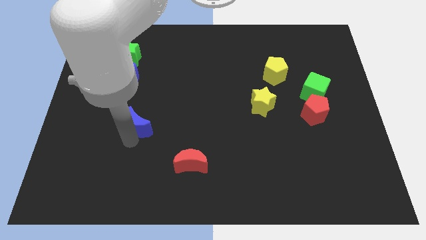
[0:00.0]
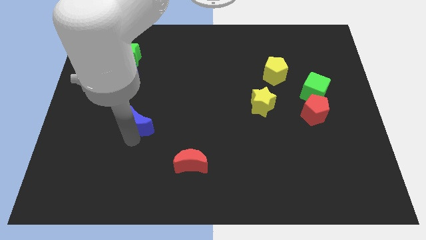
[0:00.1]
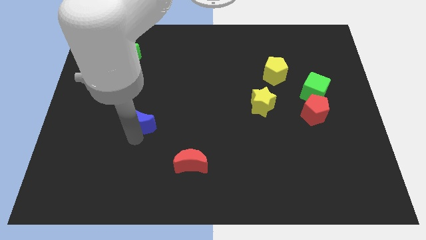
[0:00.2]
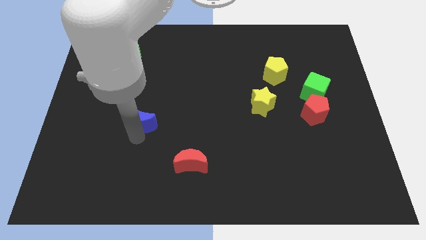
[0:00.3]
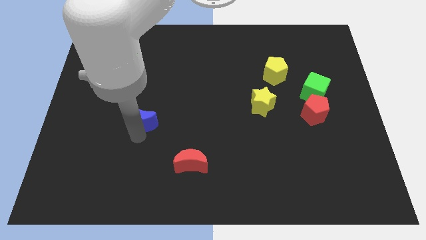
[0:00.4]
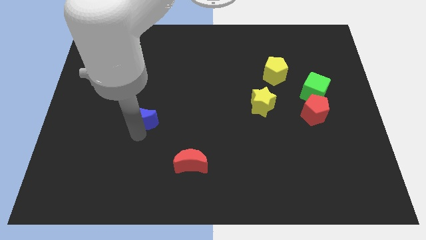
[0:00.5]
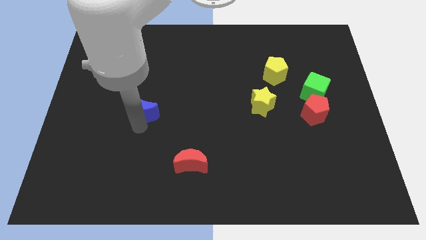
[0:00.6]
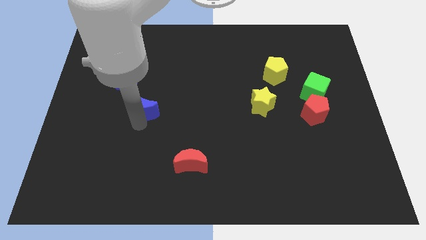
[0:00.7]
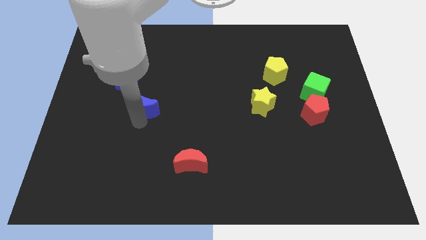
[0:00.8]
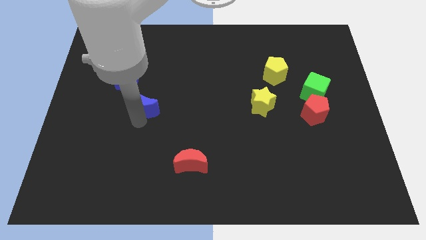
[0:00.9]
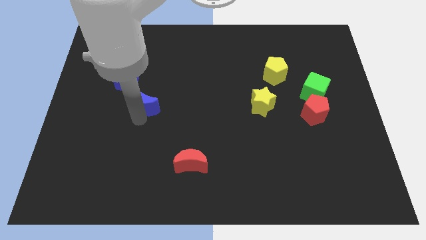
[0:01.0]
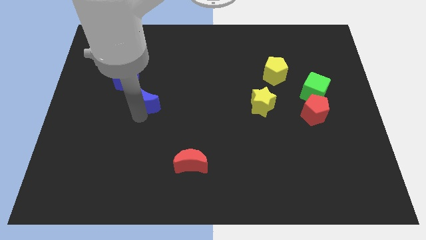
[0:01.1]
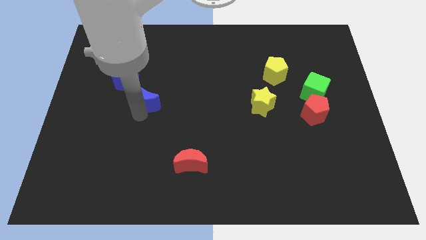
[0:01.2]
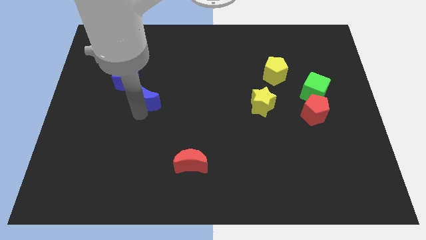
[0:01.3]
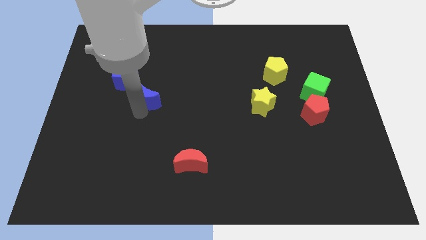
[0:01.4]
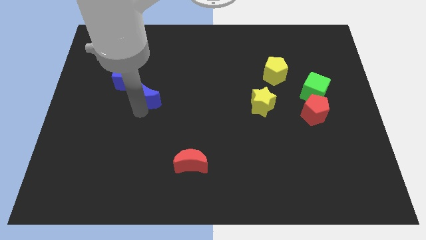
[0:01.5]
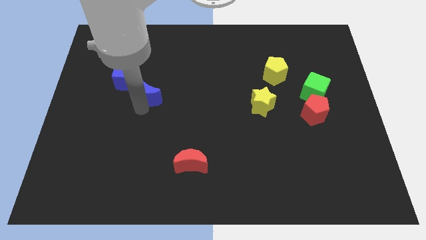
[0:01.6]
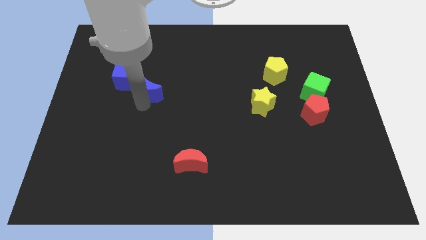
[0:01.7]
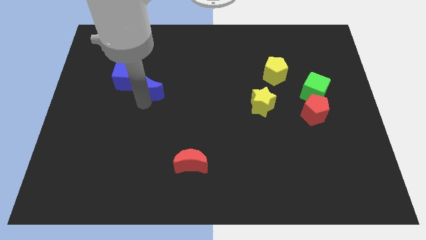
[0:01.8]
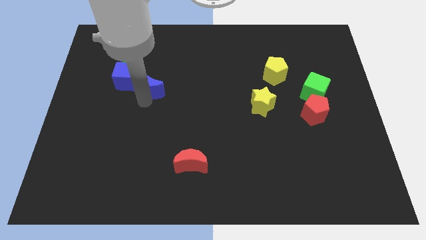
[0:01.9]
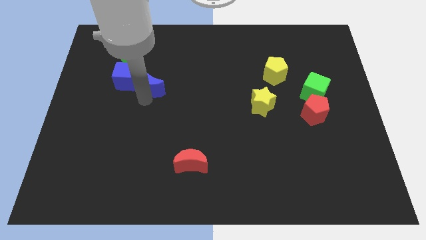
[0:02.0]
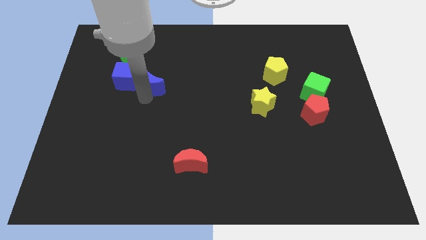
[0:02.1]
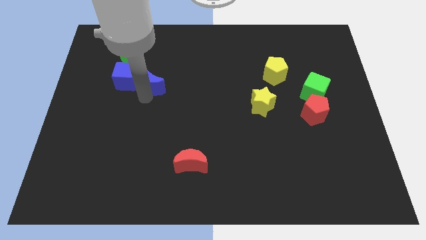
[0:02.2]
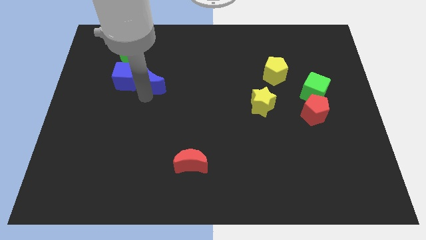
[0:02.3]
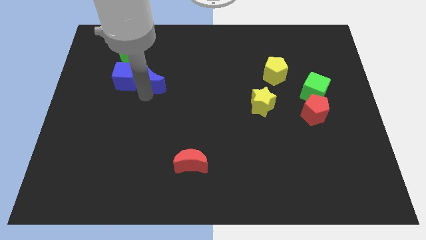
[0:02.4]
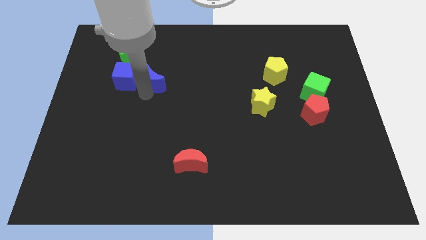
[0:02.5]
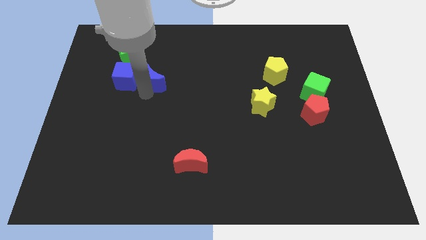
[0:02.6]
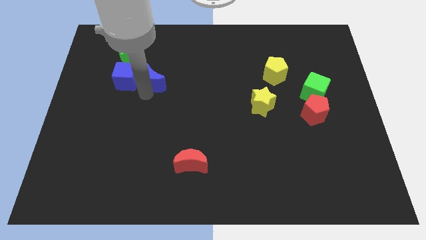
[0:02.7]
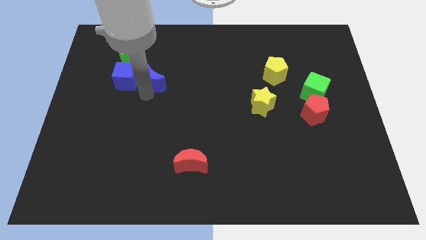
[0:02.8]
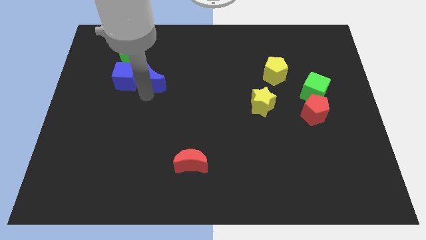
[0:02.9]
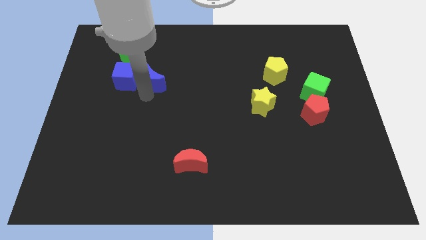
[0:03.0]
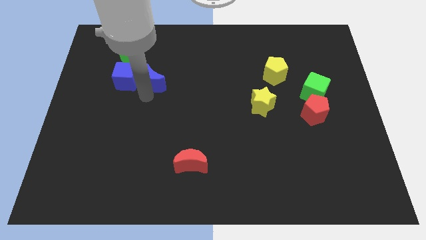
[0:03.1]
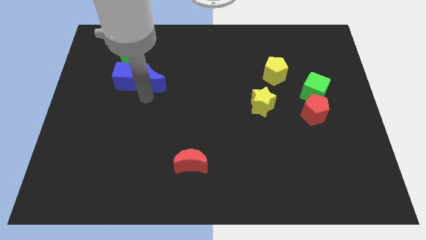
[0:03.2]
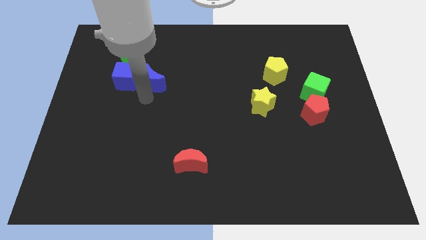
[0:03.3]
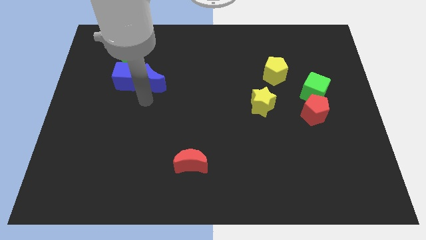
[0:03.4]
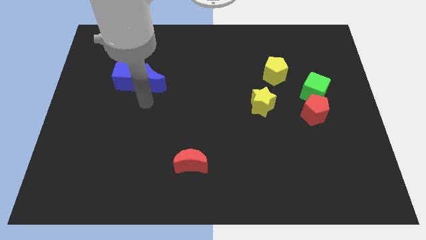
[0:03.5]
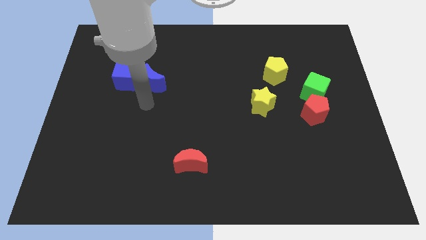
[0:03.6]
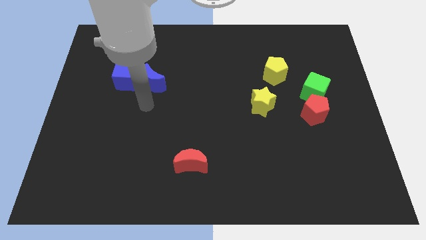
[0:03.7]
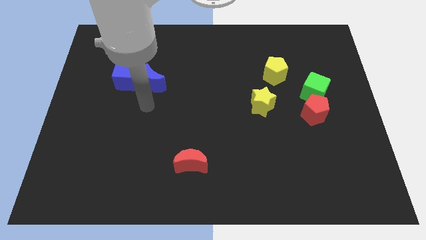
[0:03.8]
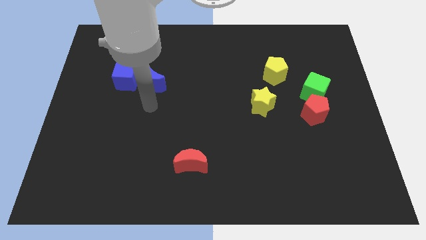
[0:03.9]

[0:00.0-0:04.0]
push blue moon beside blue cube

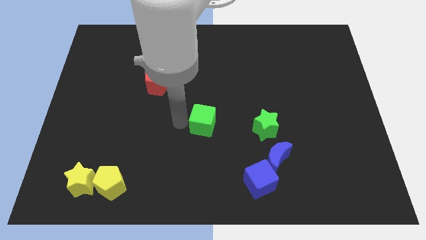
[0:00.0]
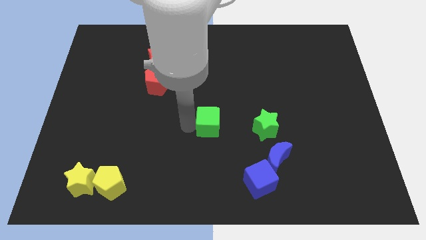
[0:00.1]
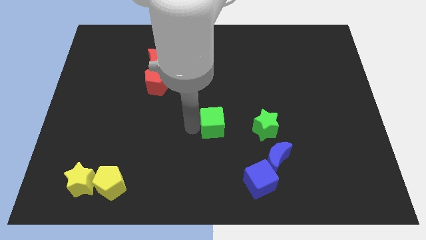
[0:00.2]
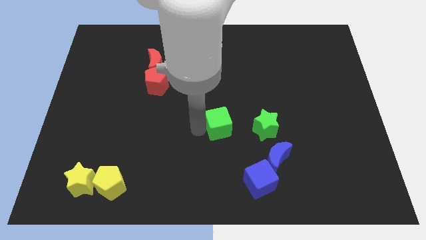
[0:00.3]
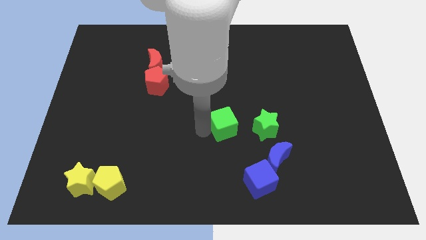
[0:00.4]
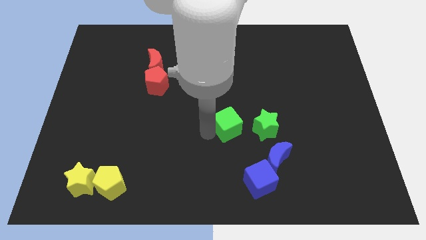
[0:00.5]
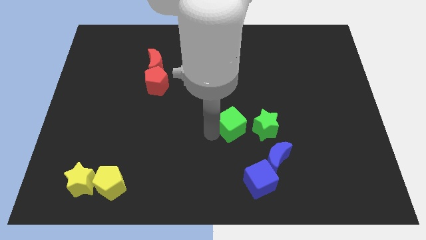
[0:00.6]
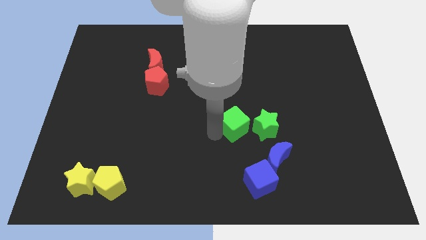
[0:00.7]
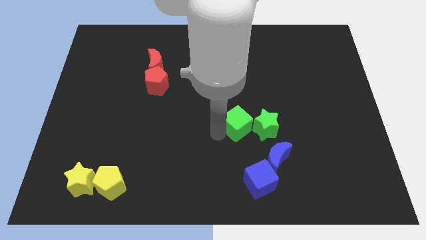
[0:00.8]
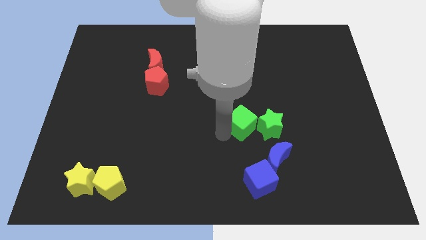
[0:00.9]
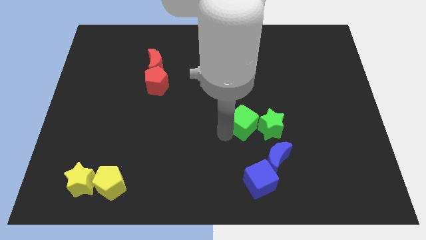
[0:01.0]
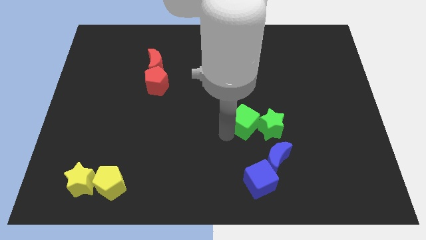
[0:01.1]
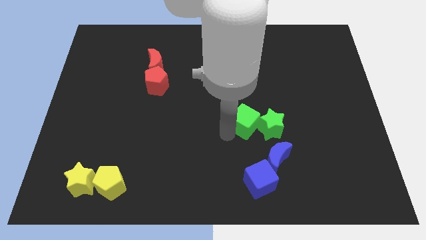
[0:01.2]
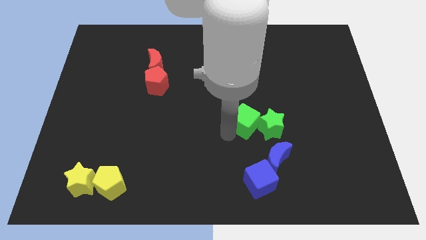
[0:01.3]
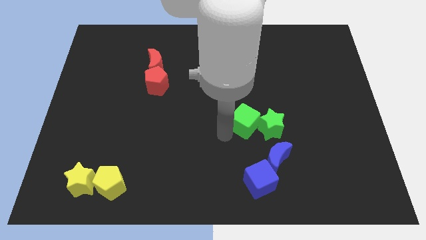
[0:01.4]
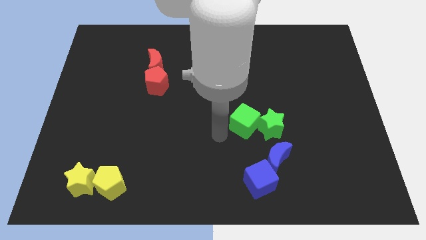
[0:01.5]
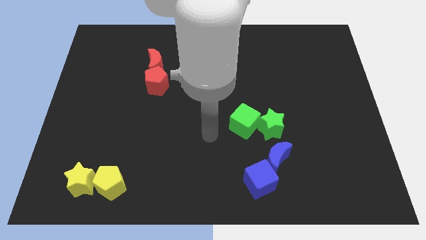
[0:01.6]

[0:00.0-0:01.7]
move the green cube towards the left of the green star

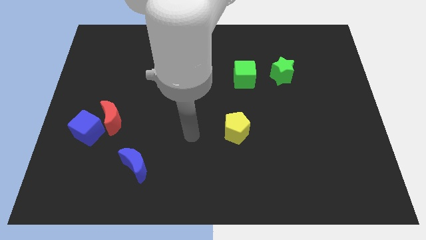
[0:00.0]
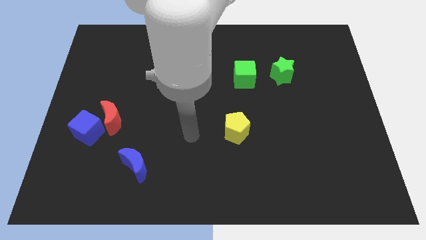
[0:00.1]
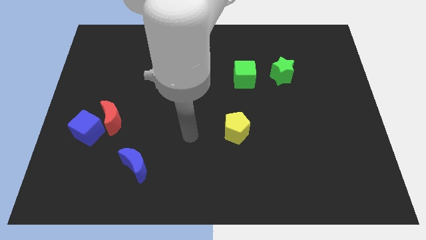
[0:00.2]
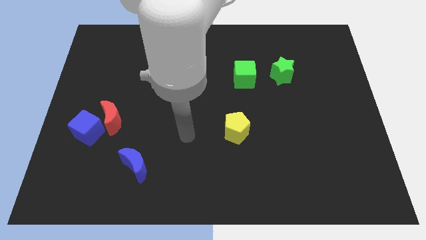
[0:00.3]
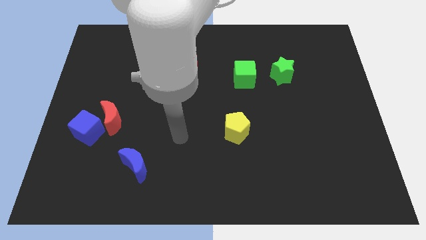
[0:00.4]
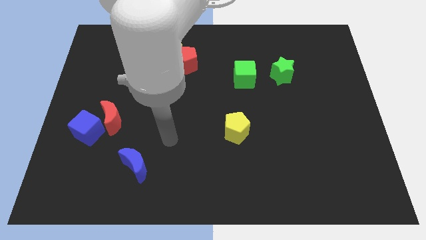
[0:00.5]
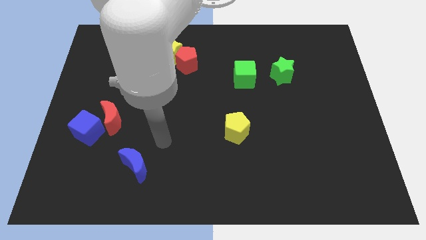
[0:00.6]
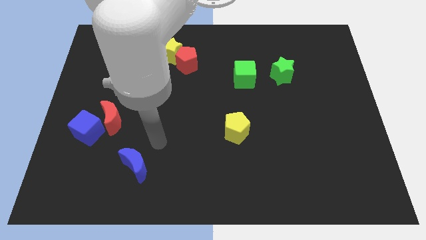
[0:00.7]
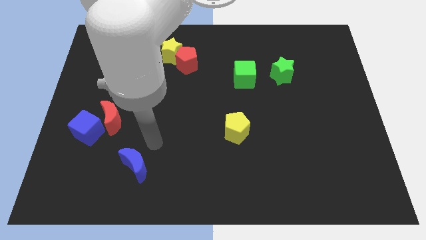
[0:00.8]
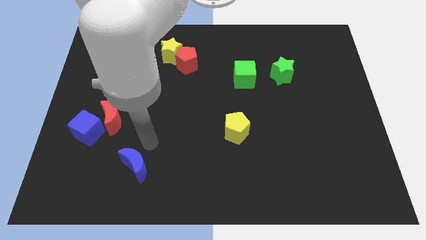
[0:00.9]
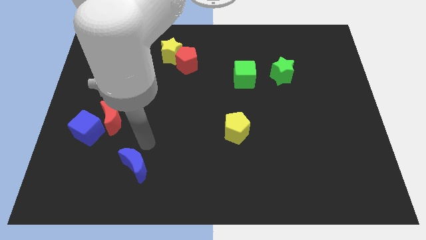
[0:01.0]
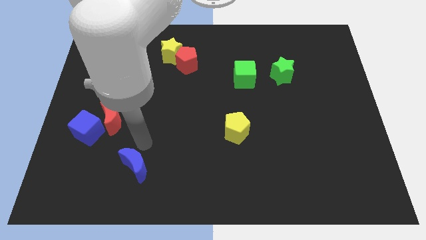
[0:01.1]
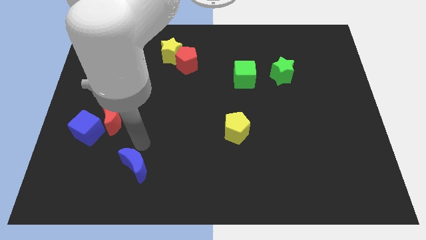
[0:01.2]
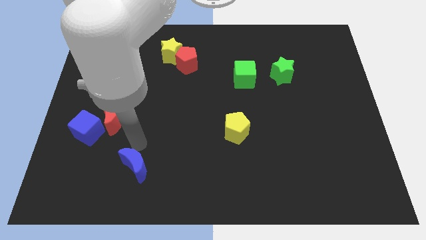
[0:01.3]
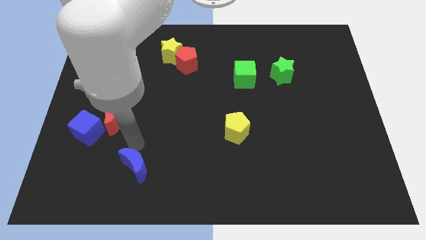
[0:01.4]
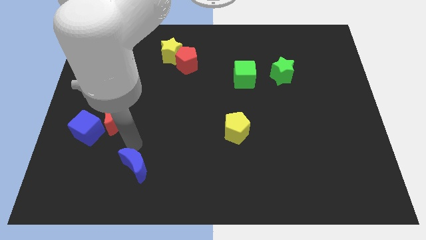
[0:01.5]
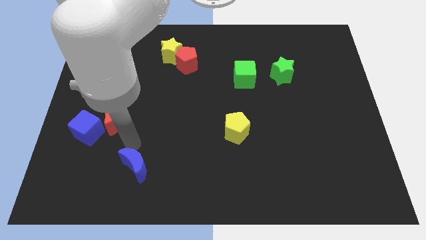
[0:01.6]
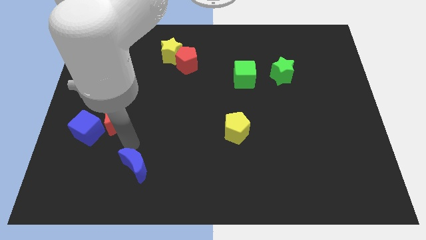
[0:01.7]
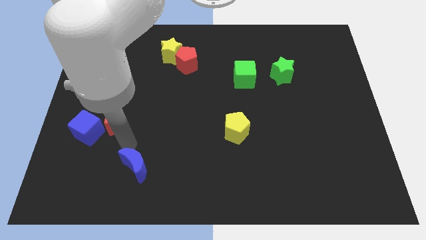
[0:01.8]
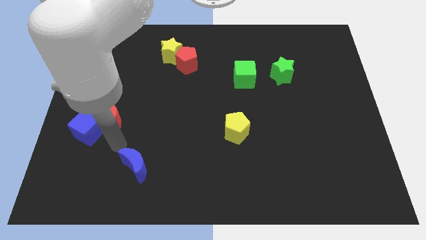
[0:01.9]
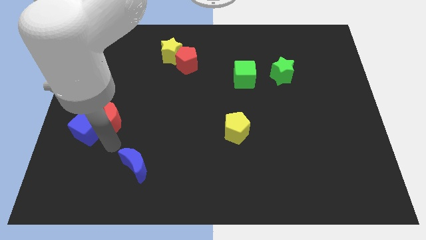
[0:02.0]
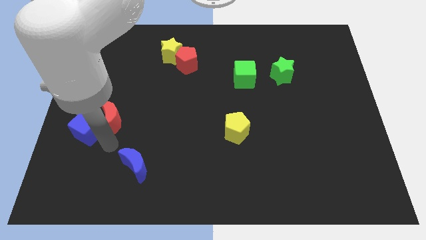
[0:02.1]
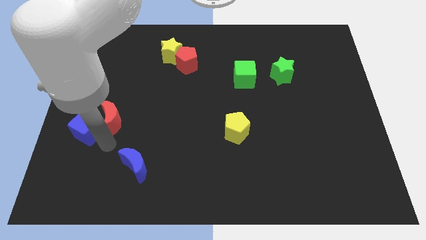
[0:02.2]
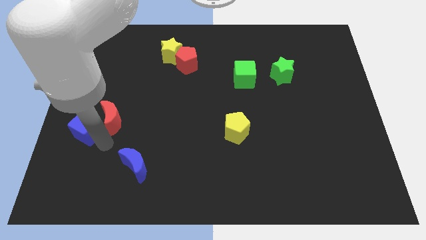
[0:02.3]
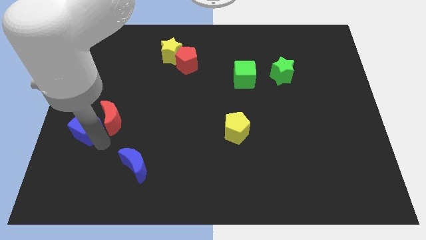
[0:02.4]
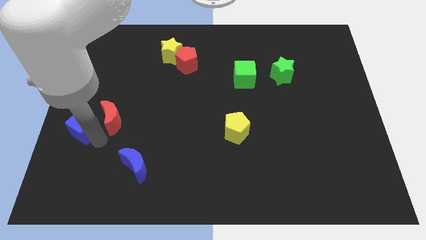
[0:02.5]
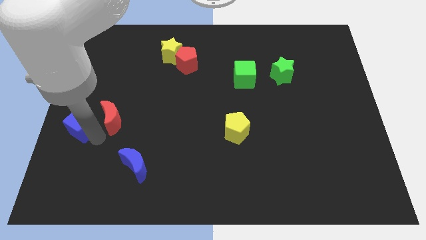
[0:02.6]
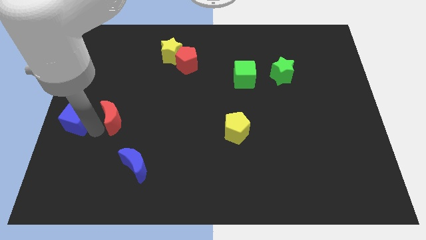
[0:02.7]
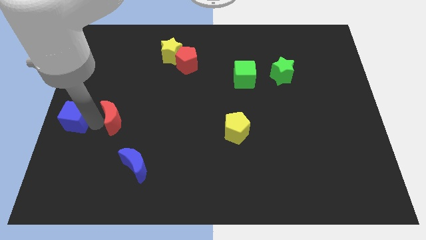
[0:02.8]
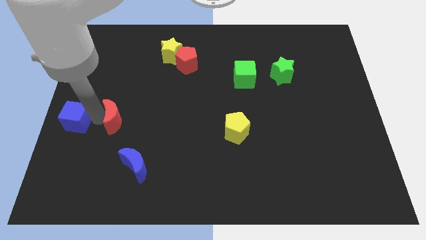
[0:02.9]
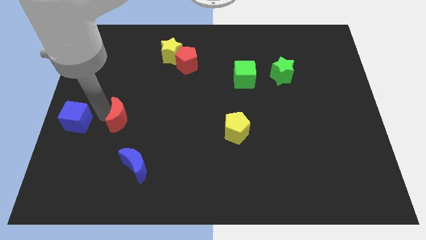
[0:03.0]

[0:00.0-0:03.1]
move your arm to the right side of the blue cube

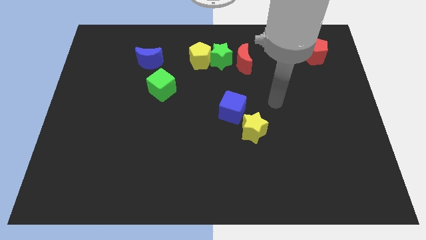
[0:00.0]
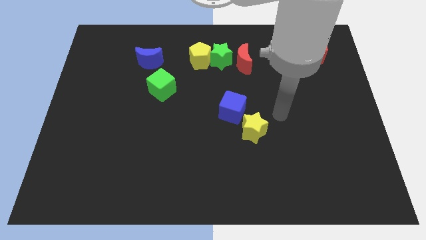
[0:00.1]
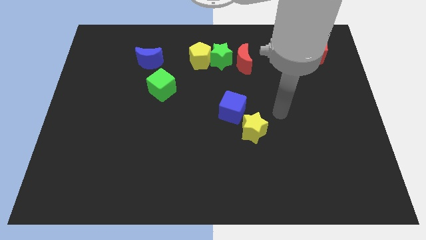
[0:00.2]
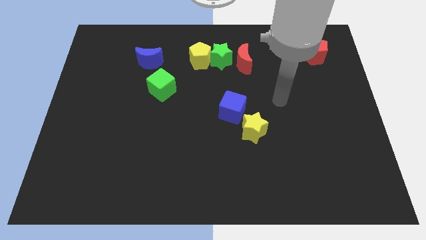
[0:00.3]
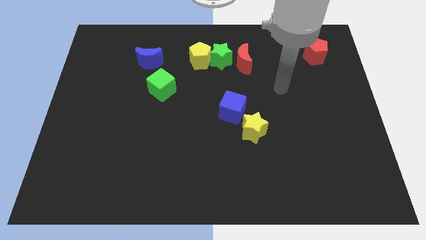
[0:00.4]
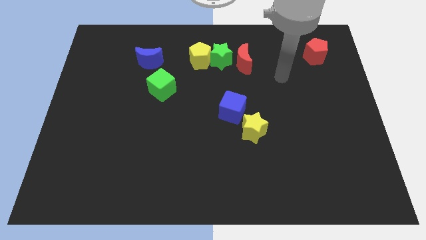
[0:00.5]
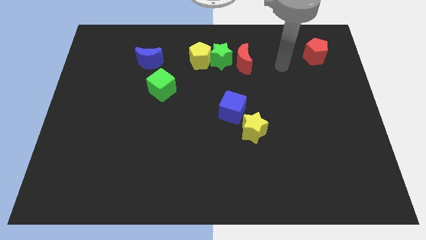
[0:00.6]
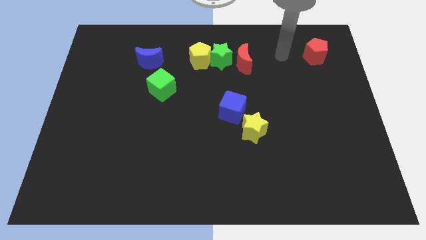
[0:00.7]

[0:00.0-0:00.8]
put your arm in between red blocks
